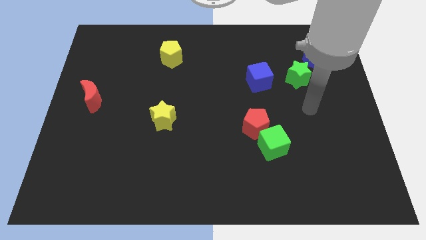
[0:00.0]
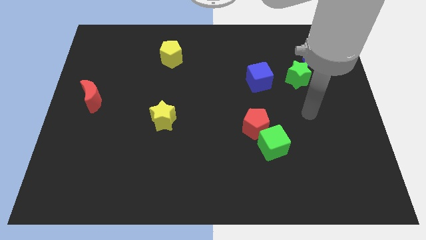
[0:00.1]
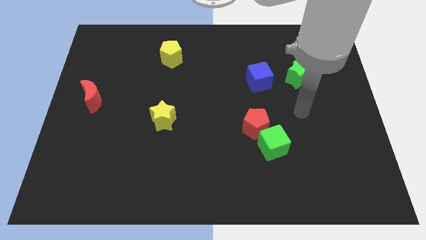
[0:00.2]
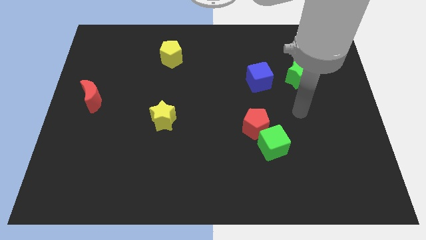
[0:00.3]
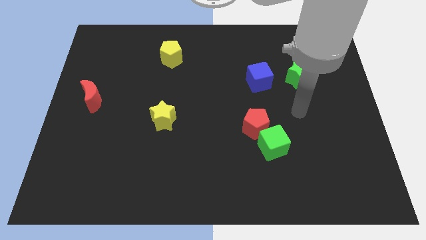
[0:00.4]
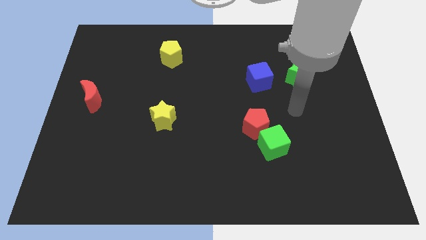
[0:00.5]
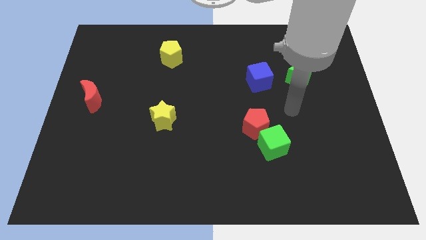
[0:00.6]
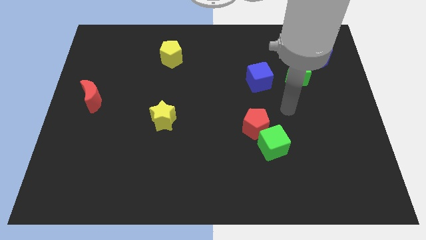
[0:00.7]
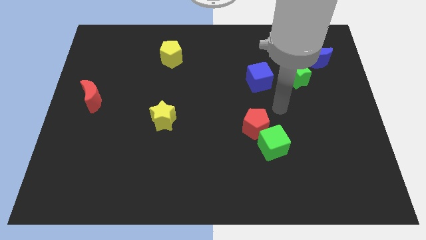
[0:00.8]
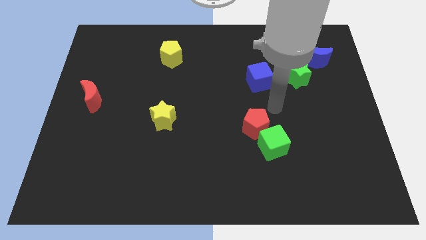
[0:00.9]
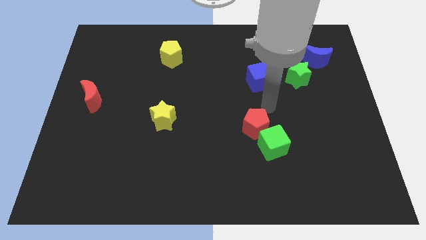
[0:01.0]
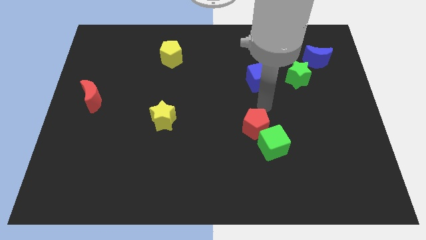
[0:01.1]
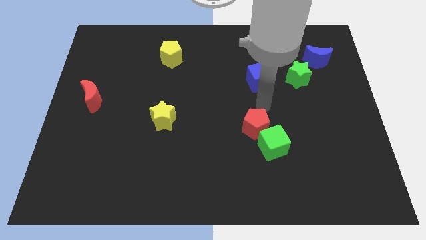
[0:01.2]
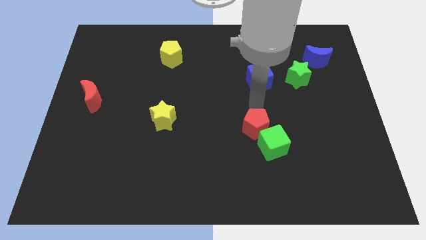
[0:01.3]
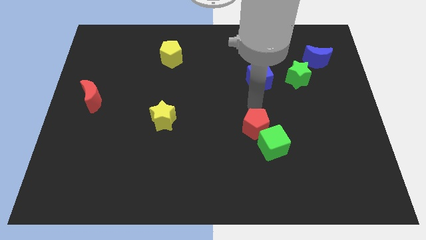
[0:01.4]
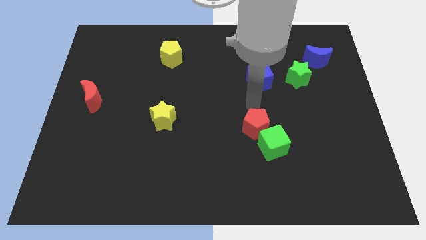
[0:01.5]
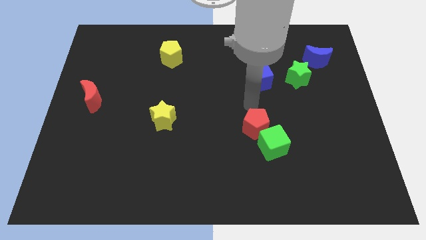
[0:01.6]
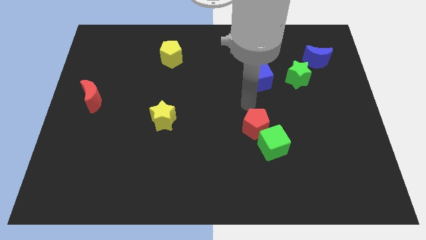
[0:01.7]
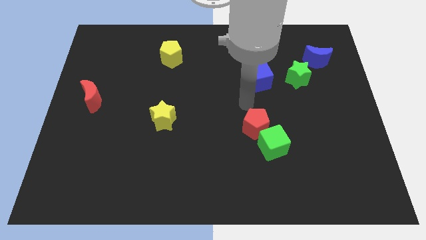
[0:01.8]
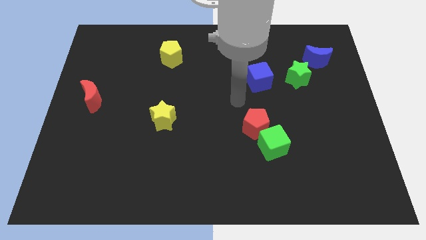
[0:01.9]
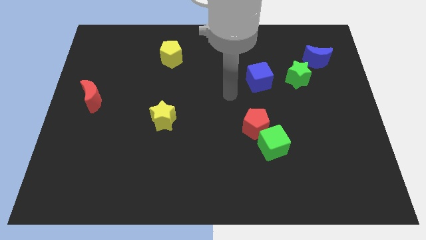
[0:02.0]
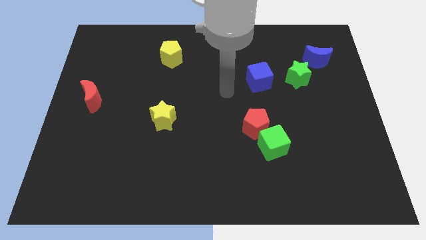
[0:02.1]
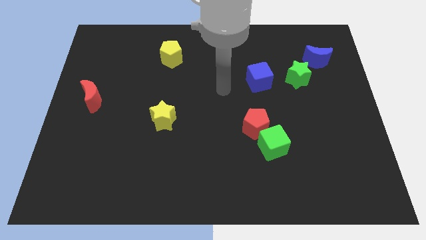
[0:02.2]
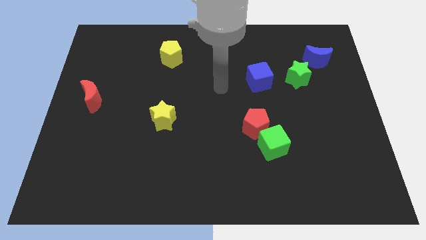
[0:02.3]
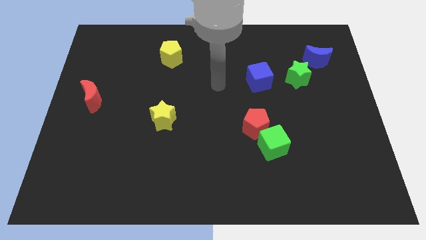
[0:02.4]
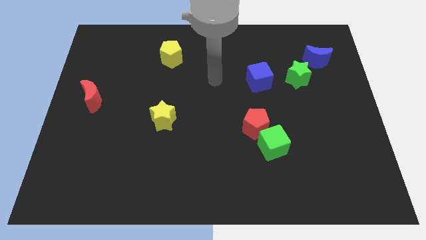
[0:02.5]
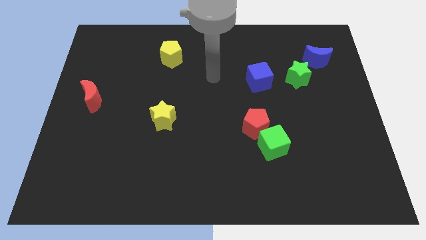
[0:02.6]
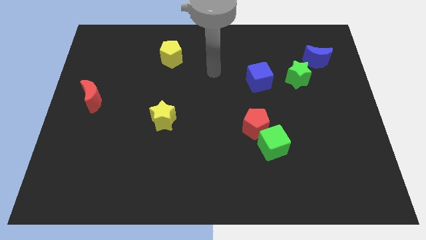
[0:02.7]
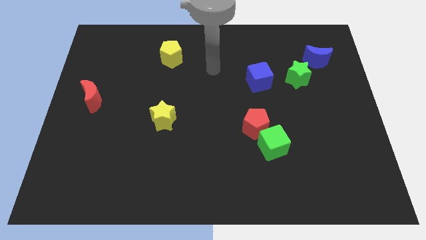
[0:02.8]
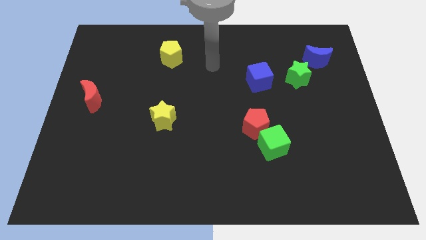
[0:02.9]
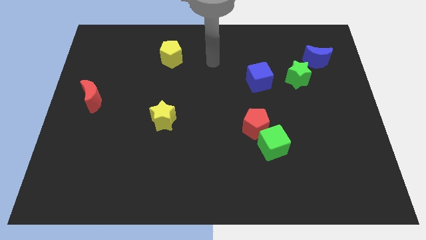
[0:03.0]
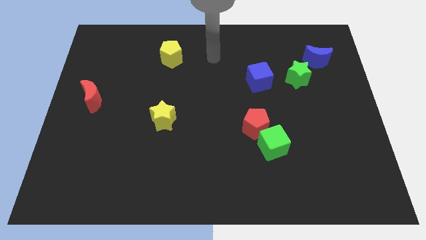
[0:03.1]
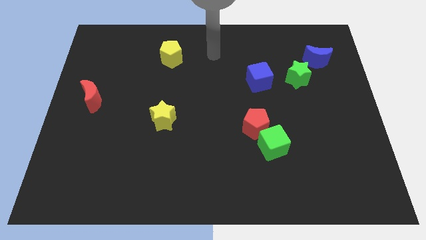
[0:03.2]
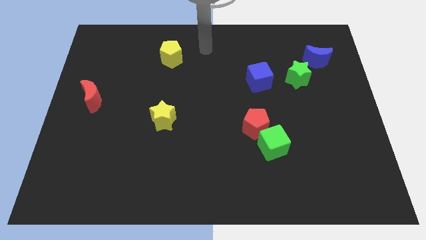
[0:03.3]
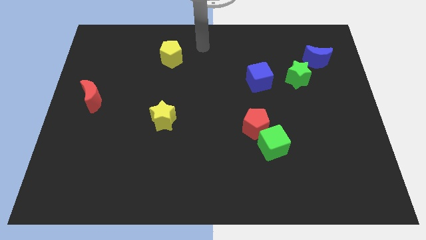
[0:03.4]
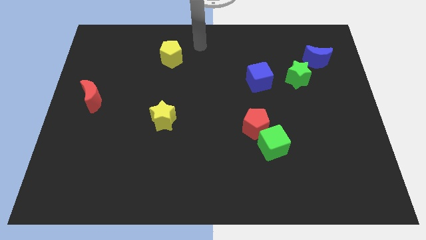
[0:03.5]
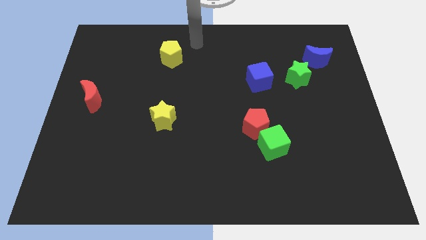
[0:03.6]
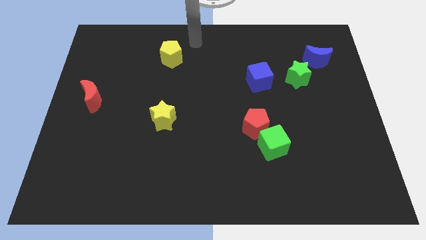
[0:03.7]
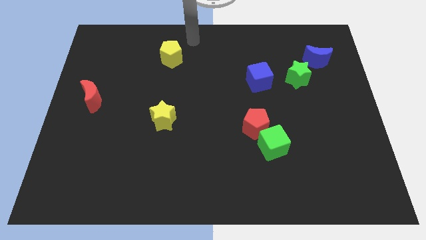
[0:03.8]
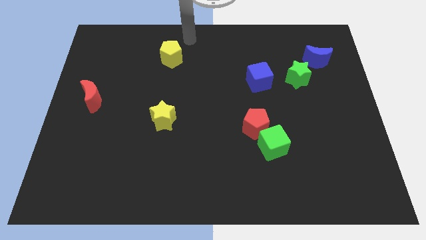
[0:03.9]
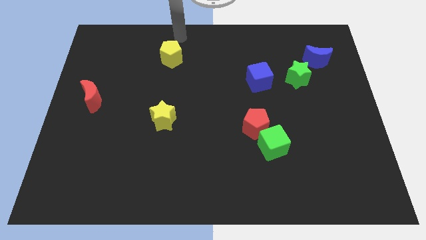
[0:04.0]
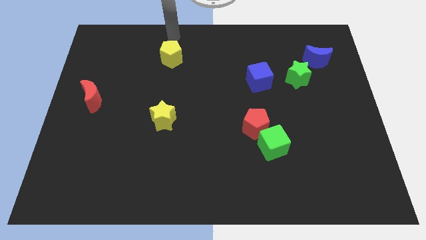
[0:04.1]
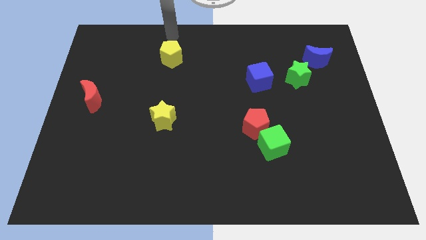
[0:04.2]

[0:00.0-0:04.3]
point your arm at the top of the yellow pentagon

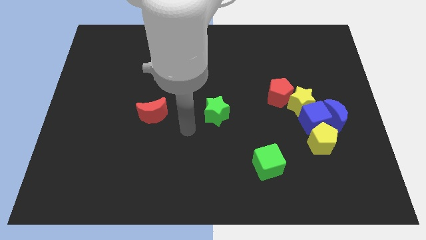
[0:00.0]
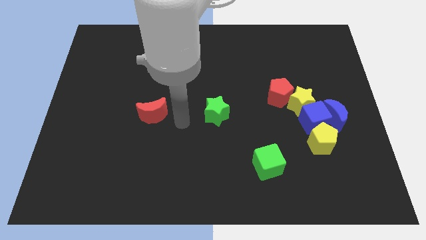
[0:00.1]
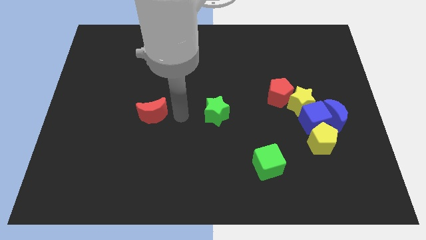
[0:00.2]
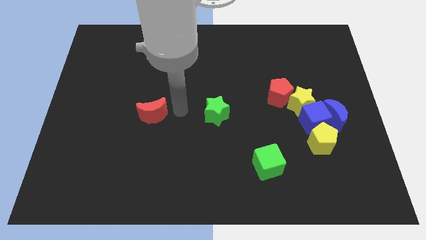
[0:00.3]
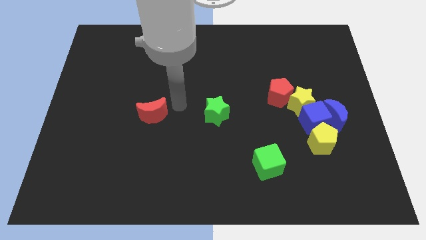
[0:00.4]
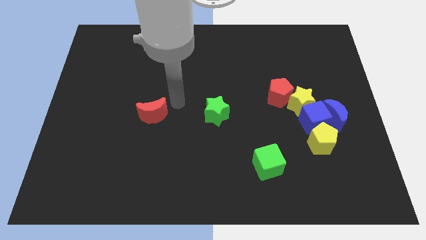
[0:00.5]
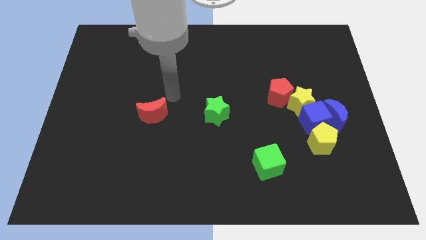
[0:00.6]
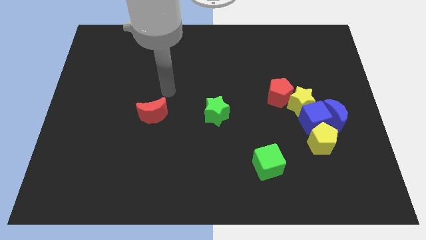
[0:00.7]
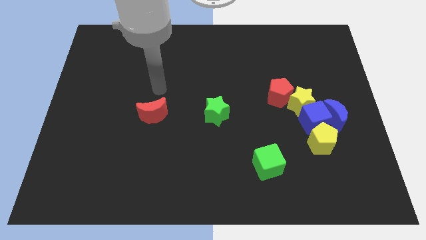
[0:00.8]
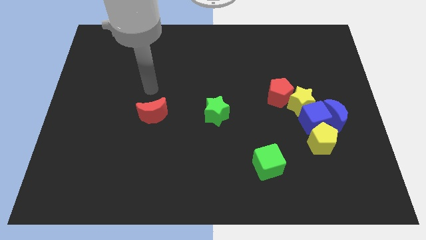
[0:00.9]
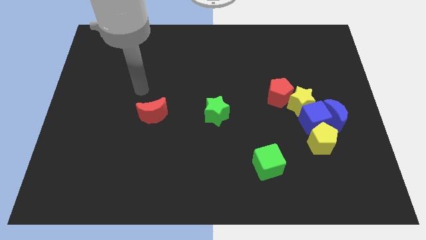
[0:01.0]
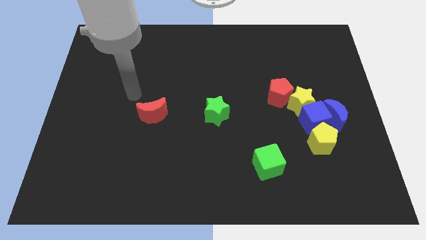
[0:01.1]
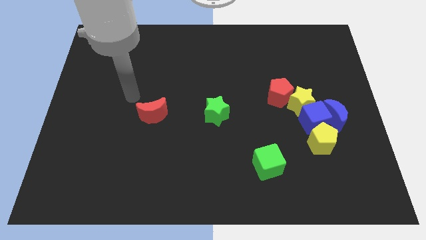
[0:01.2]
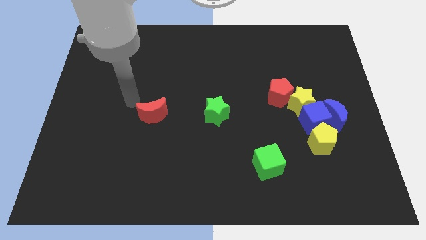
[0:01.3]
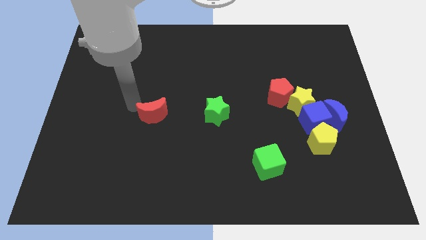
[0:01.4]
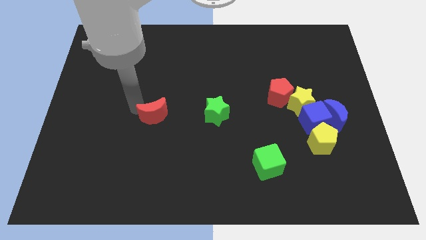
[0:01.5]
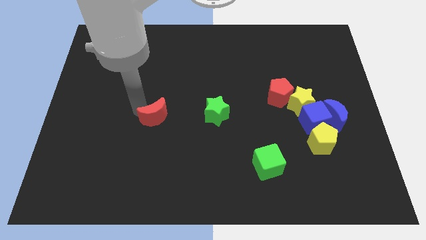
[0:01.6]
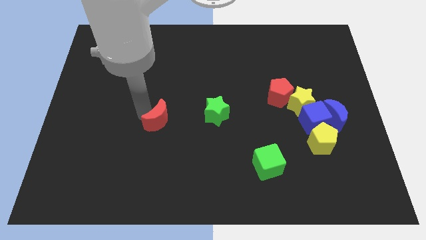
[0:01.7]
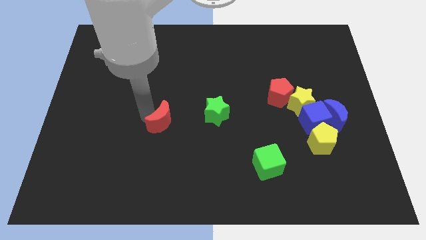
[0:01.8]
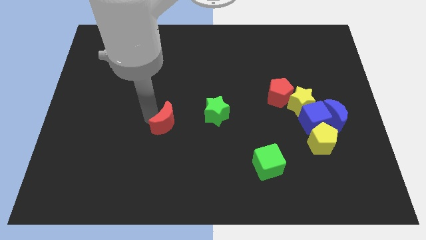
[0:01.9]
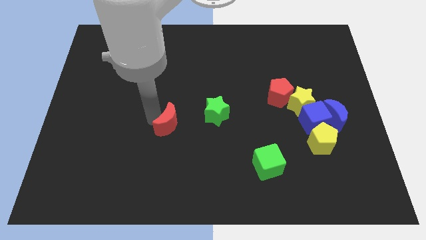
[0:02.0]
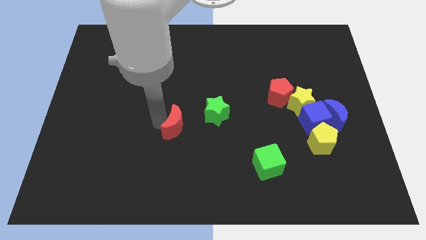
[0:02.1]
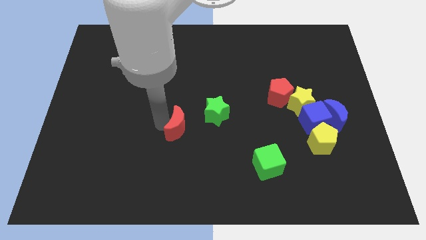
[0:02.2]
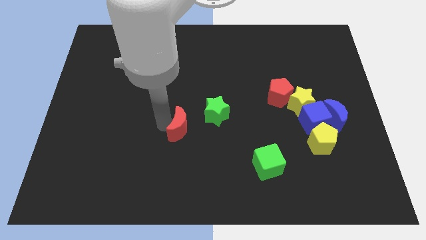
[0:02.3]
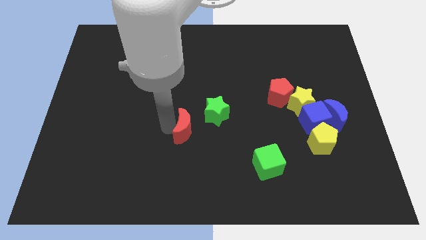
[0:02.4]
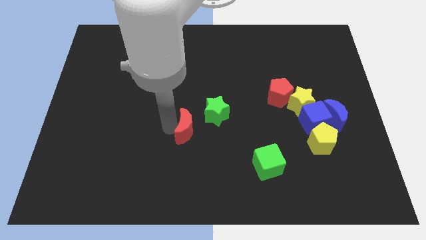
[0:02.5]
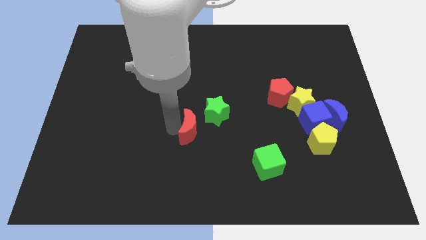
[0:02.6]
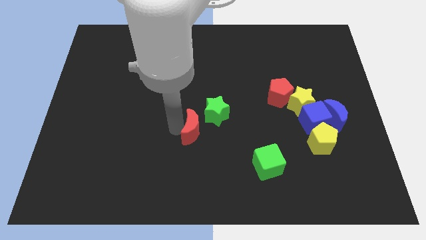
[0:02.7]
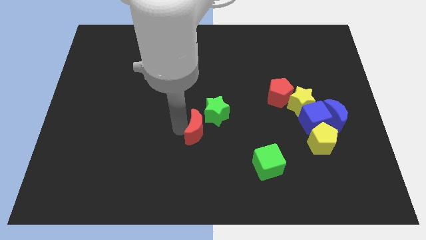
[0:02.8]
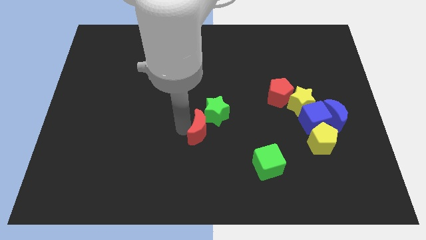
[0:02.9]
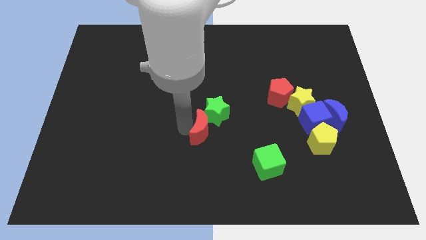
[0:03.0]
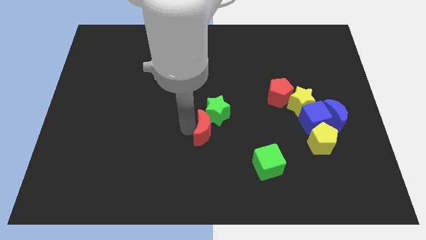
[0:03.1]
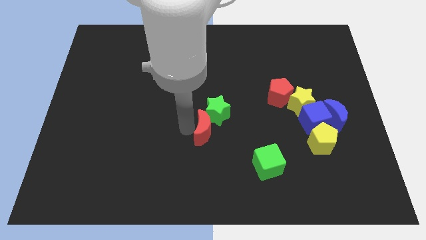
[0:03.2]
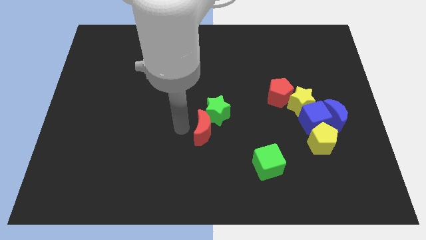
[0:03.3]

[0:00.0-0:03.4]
move the red crescent into the green star

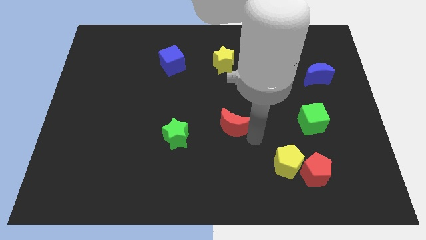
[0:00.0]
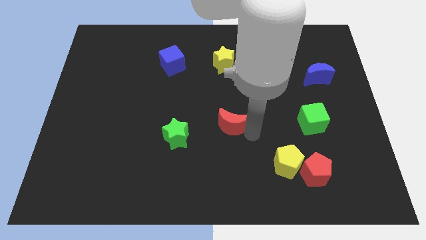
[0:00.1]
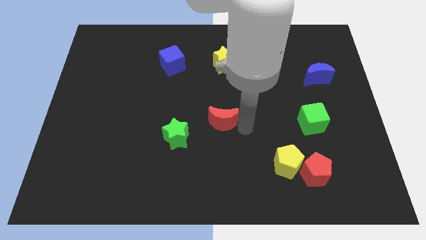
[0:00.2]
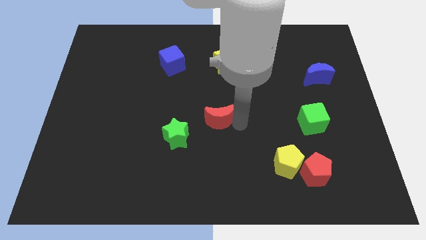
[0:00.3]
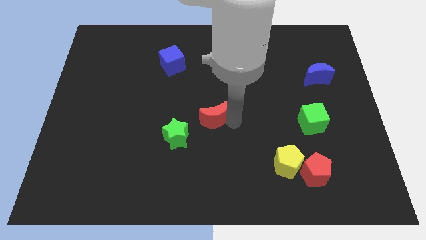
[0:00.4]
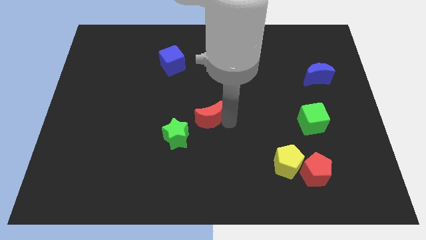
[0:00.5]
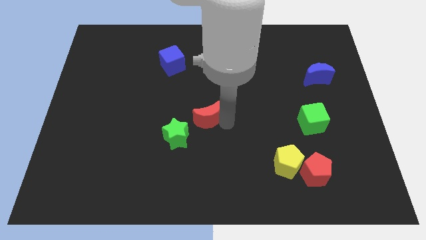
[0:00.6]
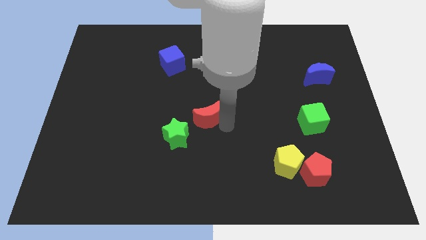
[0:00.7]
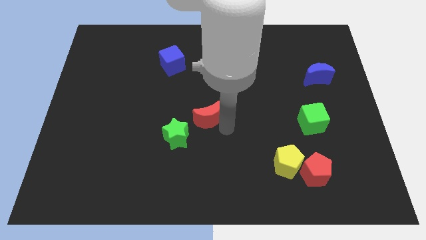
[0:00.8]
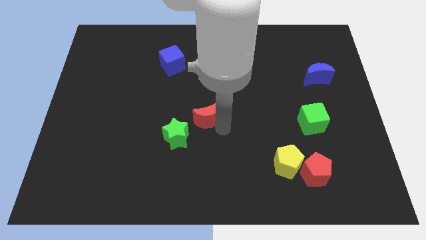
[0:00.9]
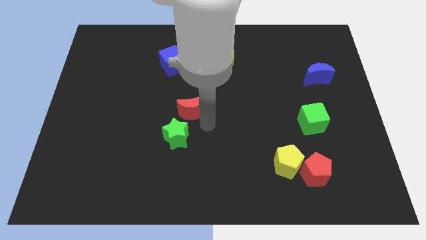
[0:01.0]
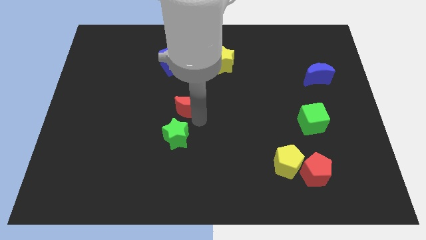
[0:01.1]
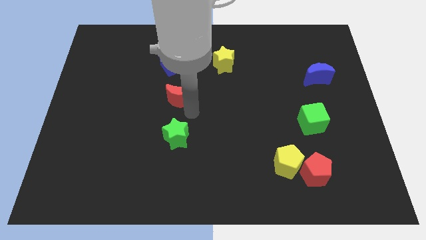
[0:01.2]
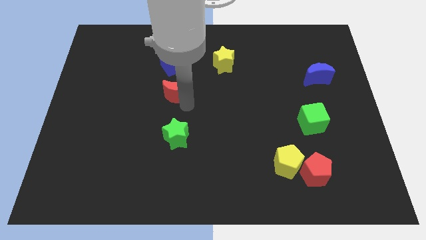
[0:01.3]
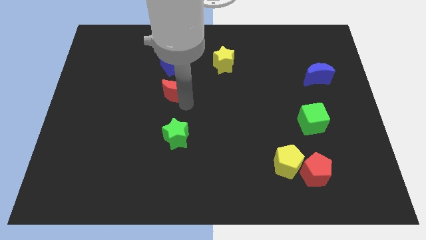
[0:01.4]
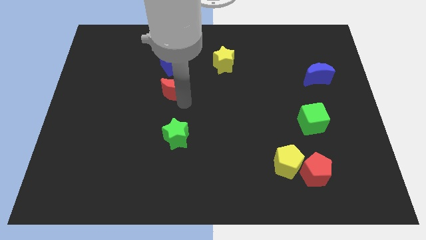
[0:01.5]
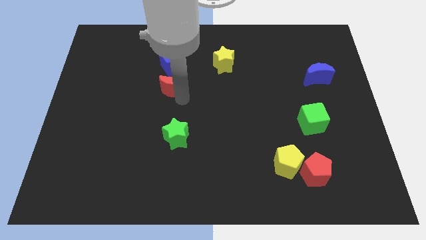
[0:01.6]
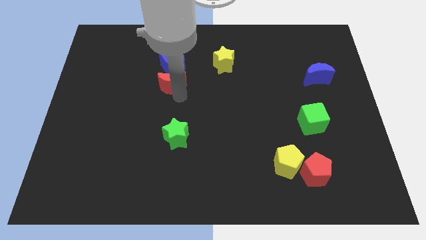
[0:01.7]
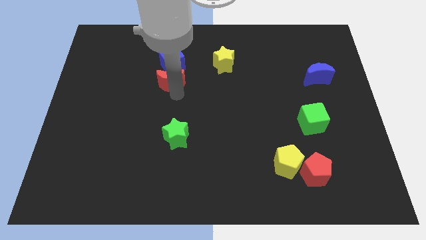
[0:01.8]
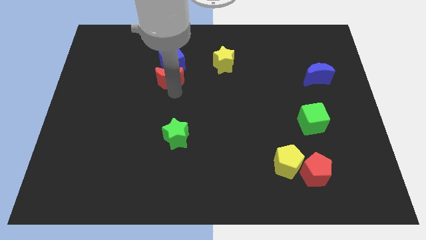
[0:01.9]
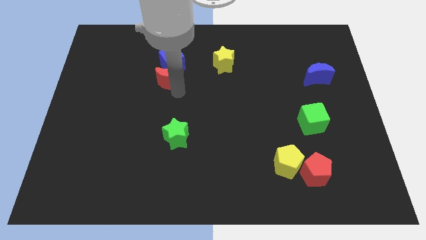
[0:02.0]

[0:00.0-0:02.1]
put the red crescent and the blue cube together
